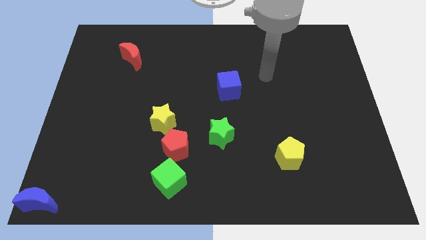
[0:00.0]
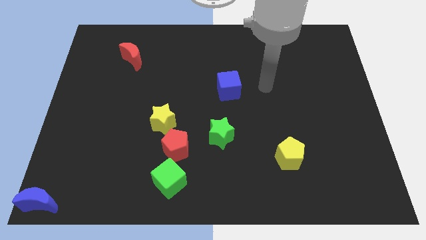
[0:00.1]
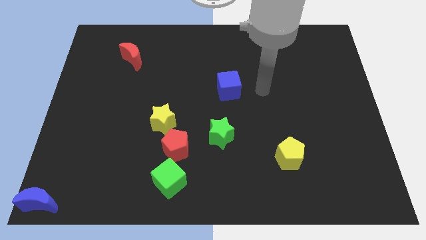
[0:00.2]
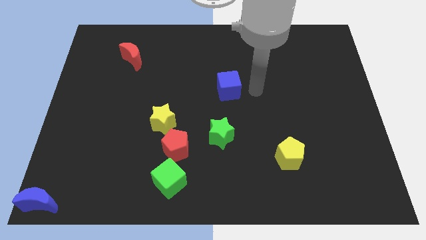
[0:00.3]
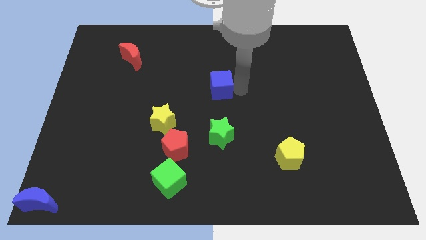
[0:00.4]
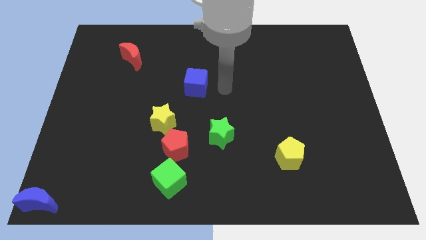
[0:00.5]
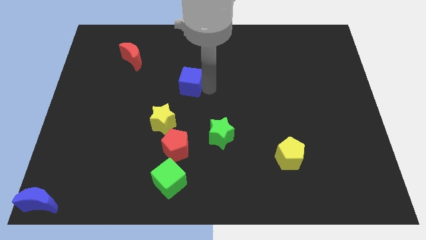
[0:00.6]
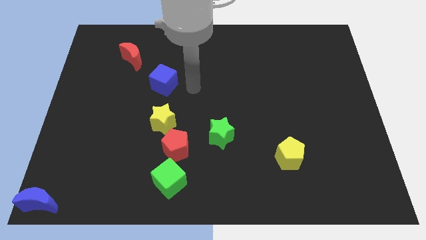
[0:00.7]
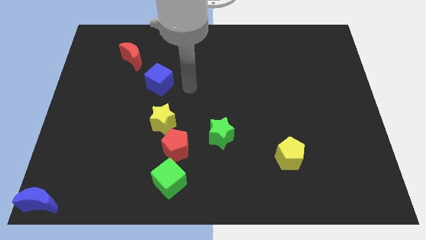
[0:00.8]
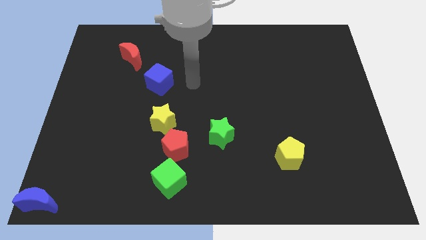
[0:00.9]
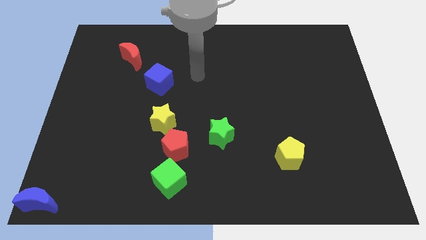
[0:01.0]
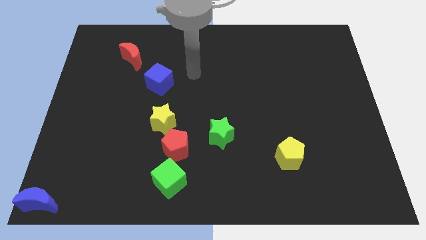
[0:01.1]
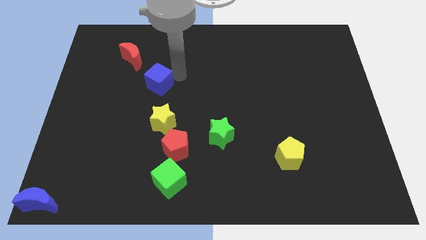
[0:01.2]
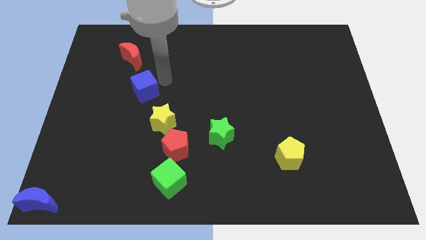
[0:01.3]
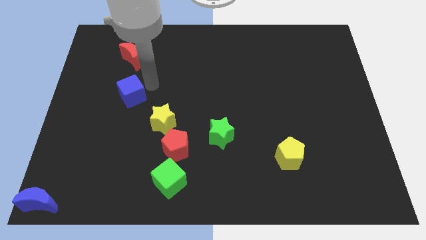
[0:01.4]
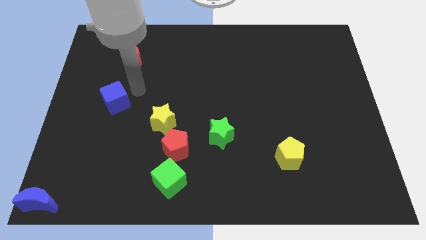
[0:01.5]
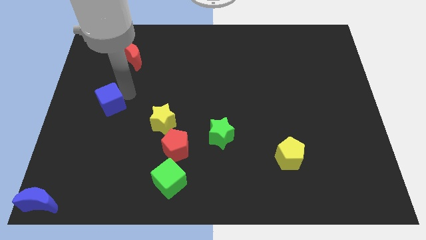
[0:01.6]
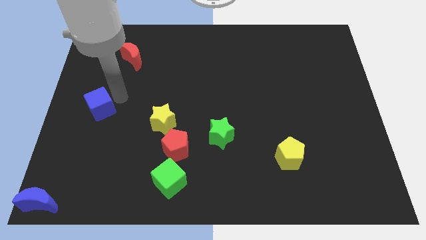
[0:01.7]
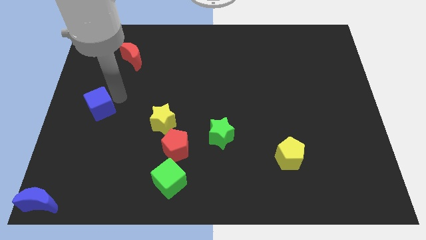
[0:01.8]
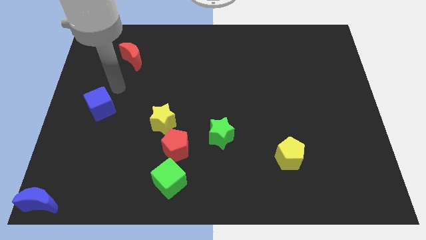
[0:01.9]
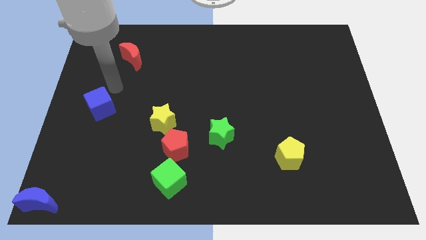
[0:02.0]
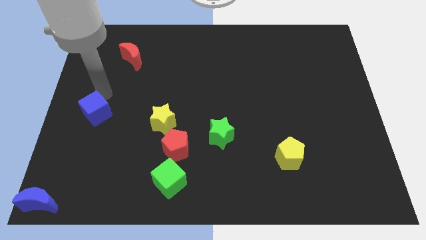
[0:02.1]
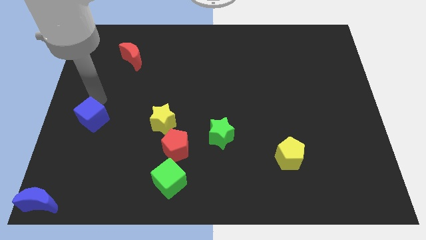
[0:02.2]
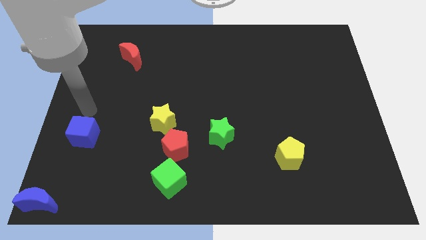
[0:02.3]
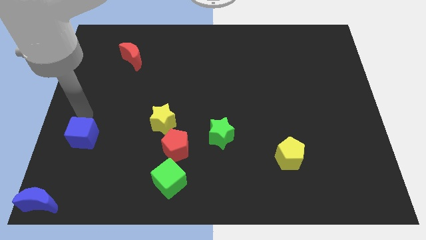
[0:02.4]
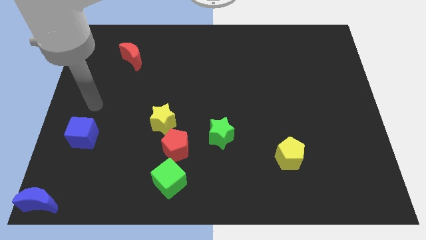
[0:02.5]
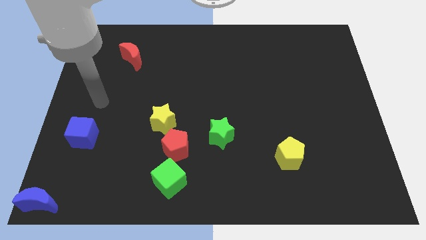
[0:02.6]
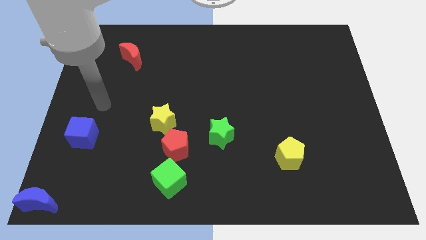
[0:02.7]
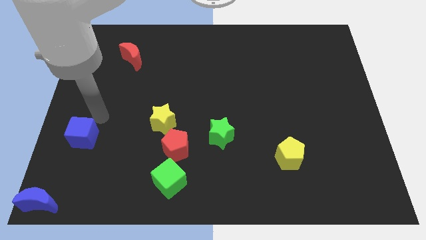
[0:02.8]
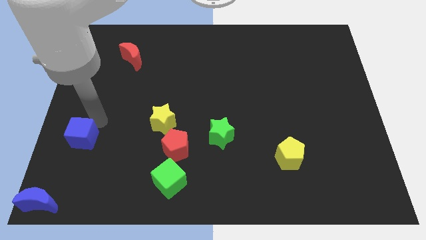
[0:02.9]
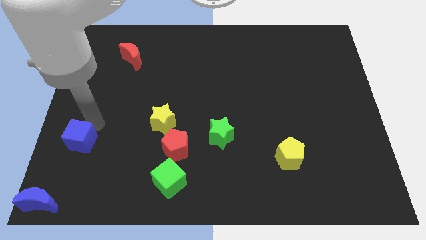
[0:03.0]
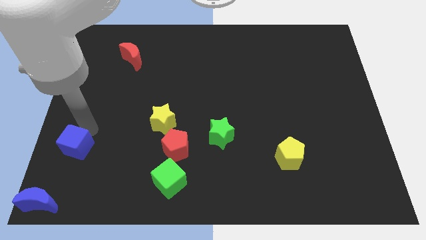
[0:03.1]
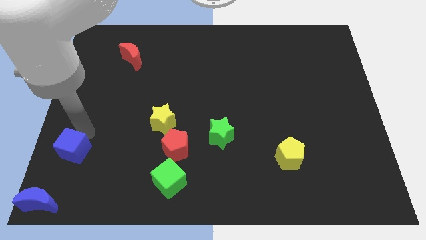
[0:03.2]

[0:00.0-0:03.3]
move blue cube towards blue moon

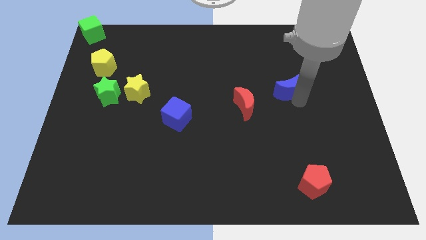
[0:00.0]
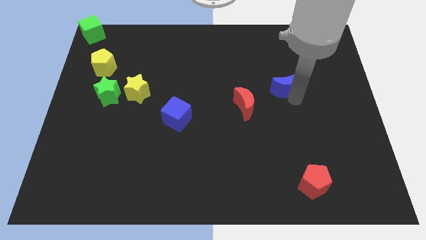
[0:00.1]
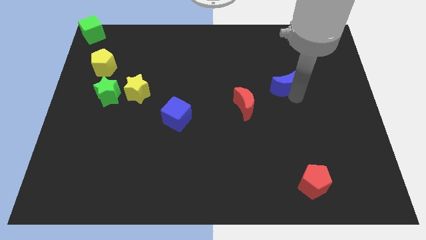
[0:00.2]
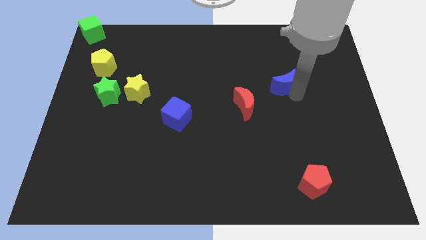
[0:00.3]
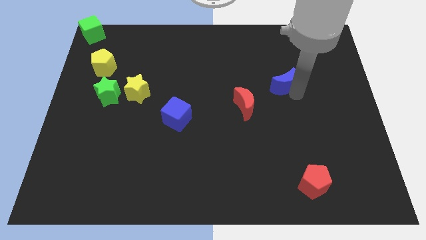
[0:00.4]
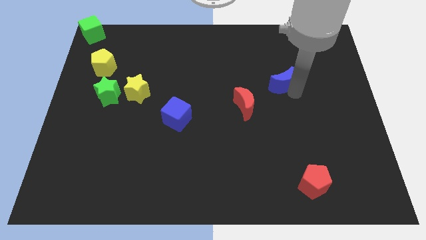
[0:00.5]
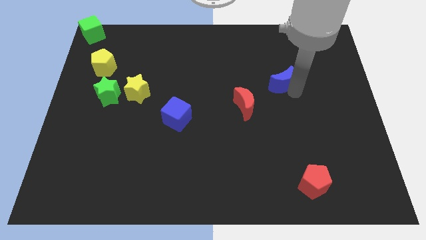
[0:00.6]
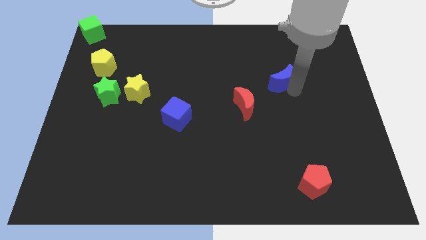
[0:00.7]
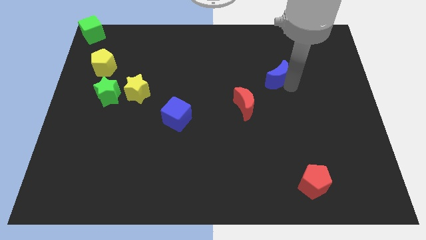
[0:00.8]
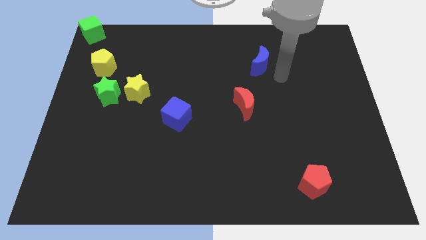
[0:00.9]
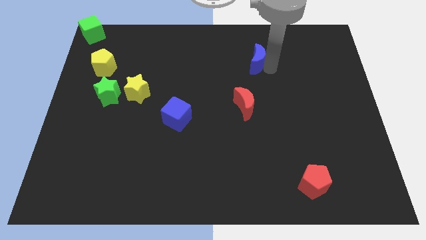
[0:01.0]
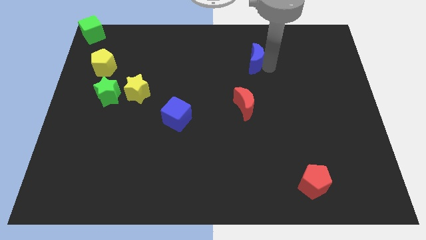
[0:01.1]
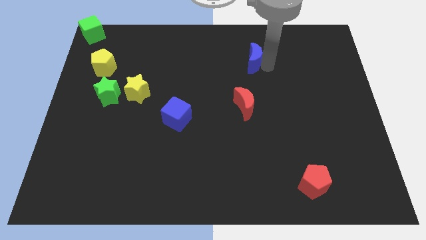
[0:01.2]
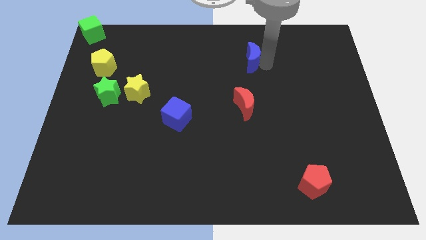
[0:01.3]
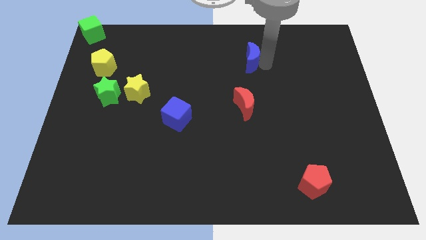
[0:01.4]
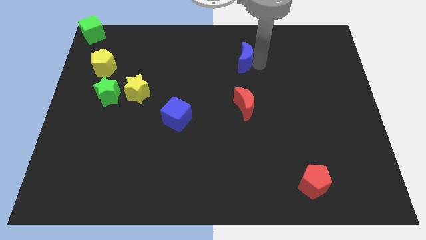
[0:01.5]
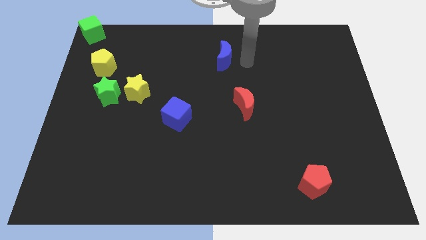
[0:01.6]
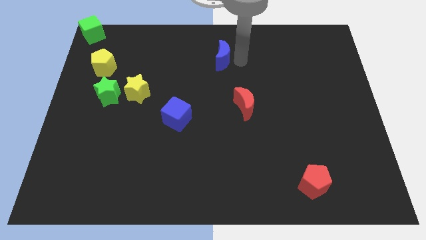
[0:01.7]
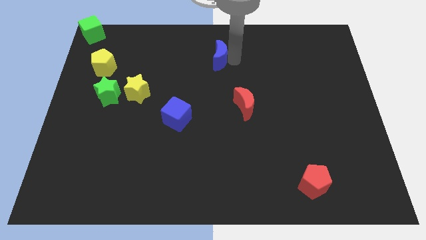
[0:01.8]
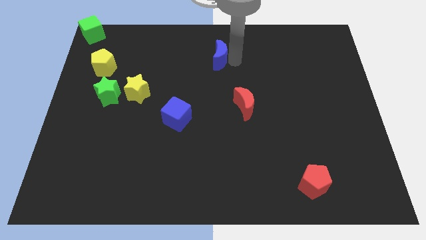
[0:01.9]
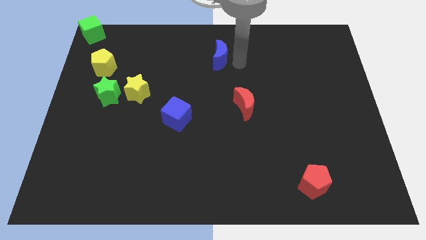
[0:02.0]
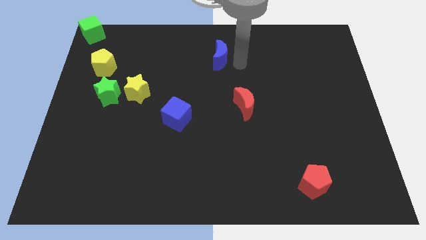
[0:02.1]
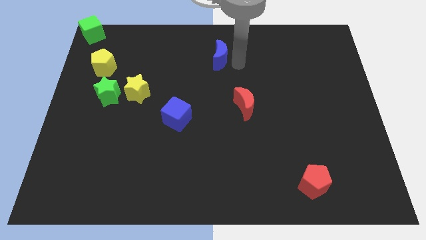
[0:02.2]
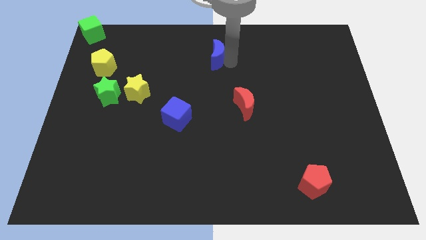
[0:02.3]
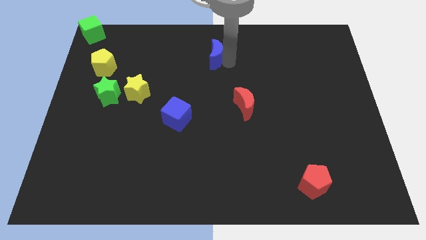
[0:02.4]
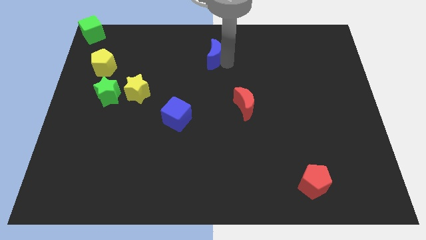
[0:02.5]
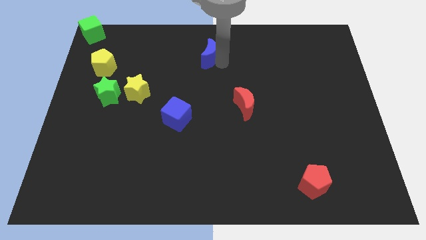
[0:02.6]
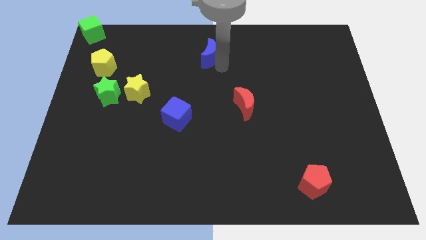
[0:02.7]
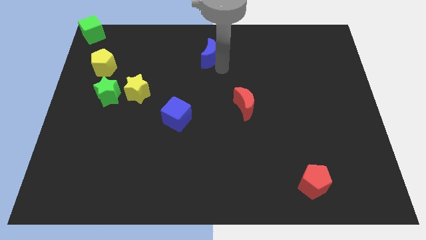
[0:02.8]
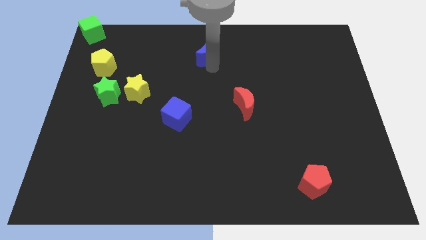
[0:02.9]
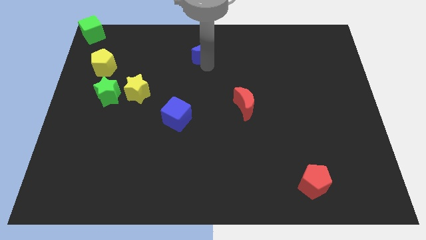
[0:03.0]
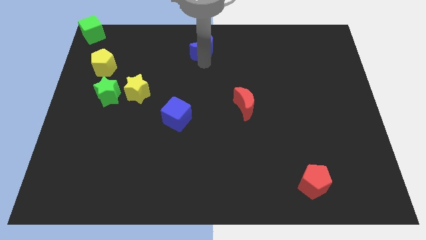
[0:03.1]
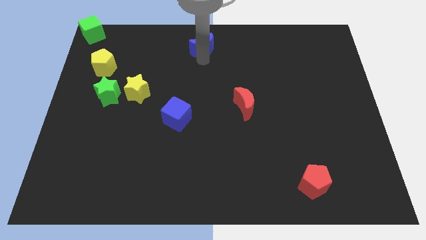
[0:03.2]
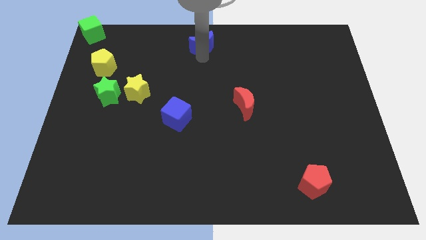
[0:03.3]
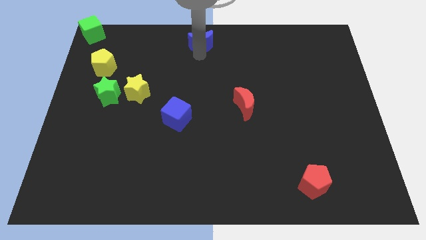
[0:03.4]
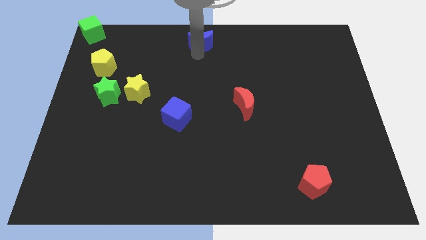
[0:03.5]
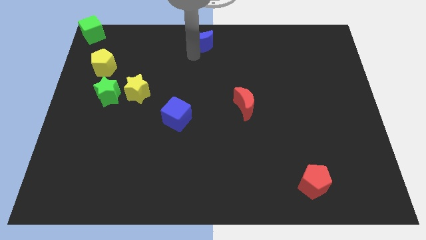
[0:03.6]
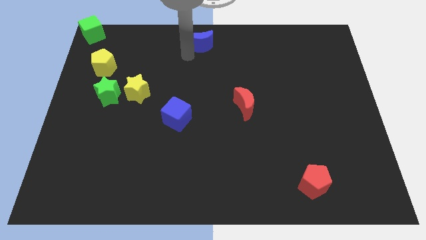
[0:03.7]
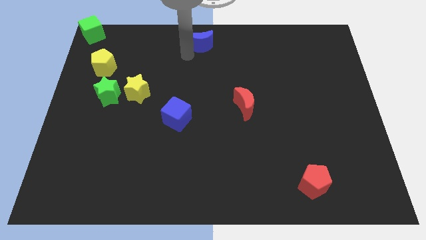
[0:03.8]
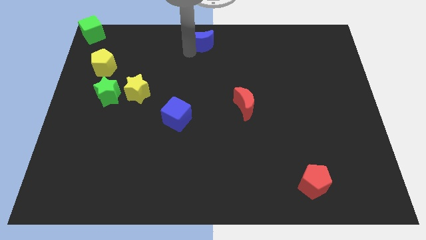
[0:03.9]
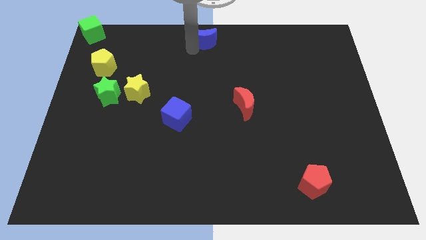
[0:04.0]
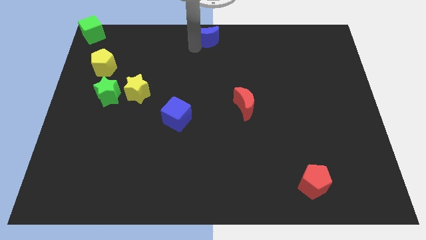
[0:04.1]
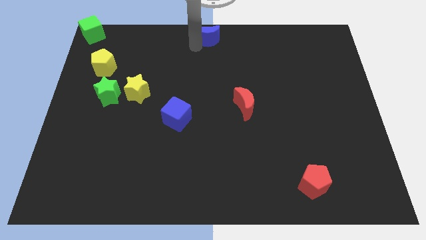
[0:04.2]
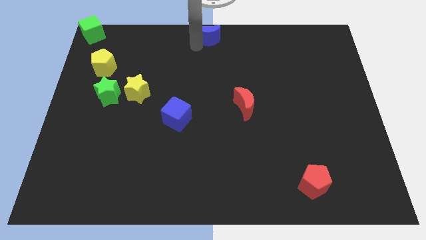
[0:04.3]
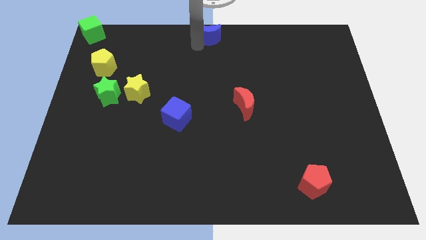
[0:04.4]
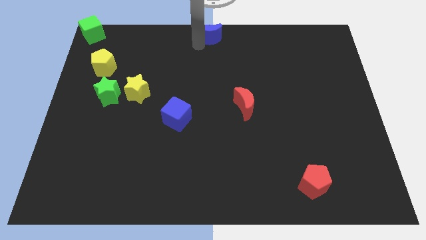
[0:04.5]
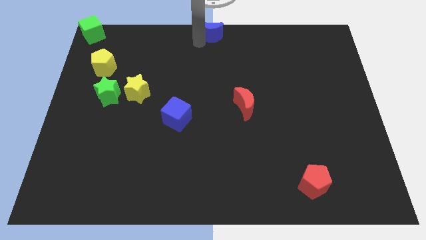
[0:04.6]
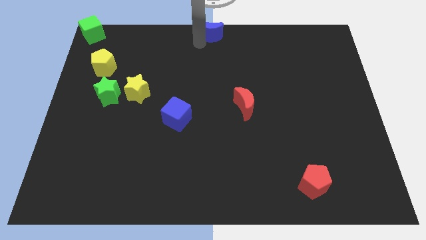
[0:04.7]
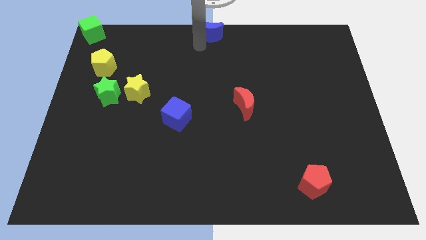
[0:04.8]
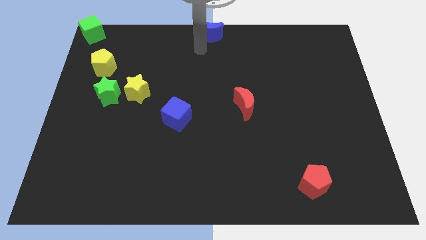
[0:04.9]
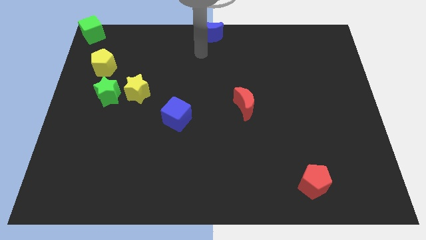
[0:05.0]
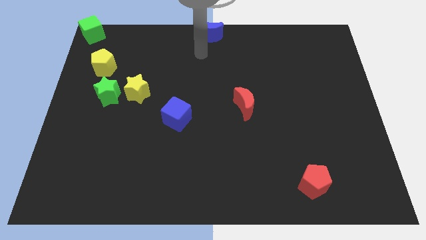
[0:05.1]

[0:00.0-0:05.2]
move the blue crescent to the top center

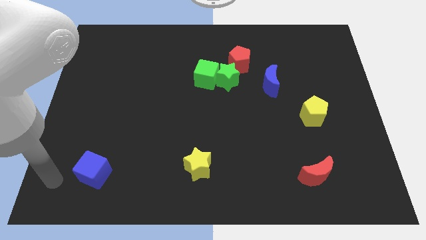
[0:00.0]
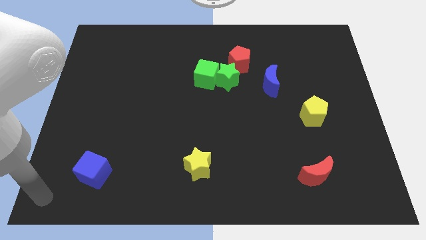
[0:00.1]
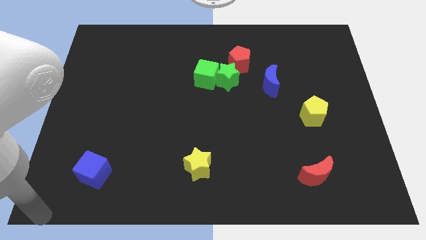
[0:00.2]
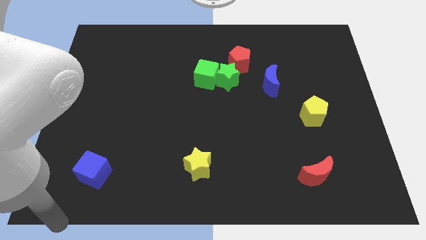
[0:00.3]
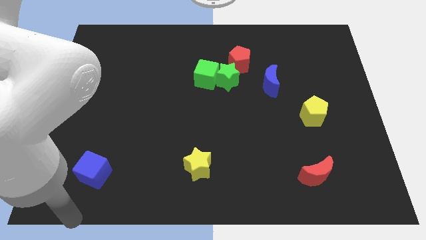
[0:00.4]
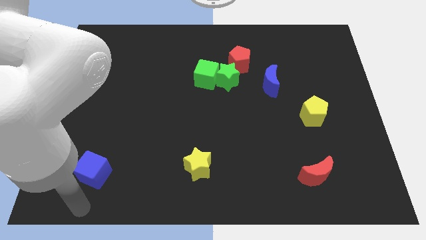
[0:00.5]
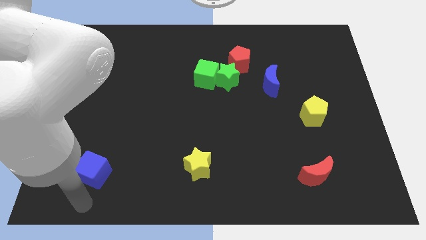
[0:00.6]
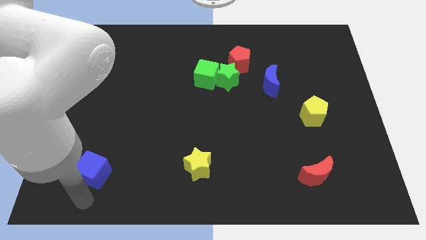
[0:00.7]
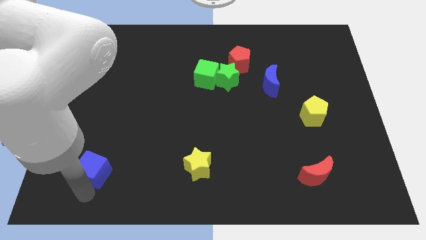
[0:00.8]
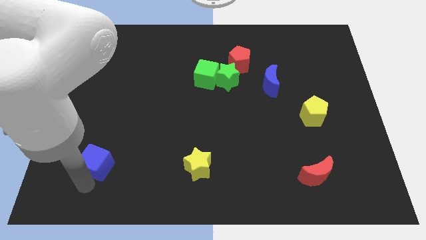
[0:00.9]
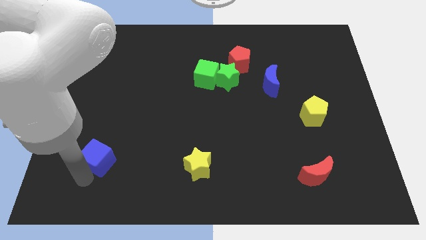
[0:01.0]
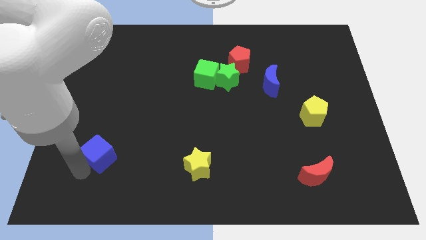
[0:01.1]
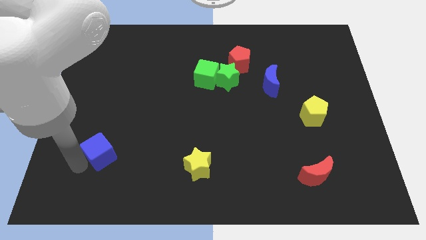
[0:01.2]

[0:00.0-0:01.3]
push the blue cube slightly to the top
